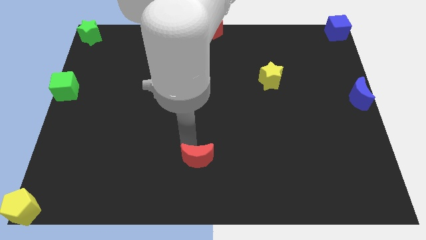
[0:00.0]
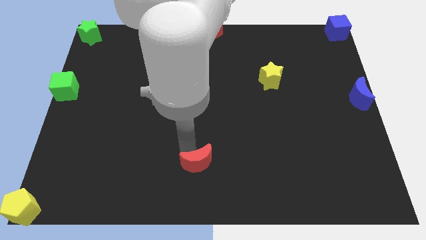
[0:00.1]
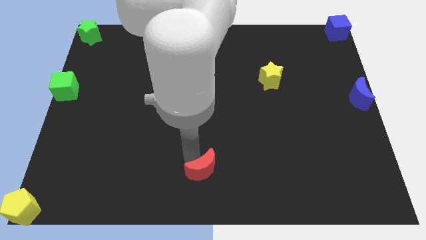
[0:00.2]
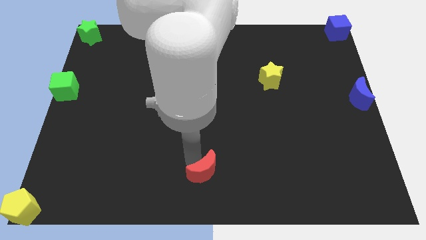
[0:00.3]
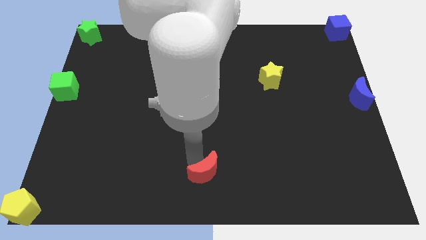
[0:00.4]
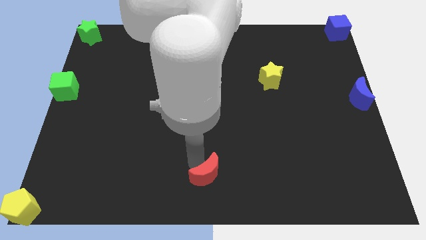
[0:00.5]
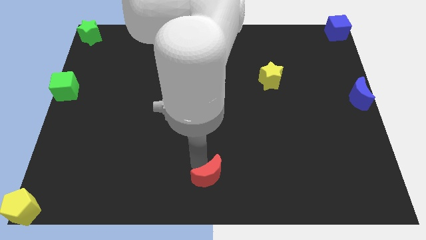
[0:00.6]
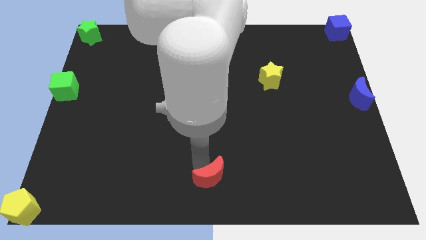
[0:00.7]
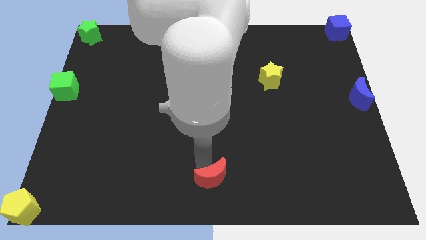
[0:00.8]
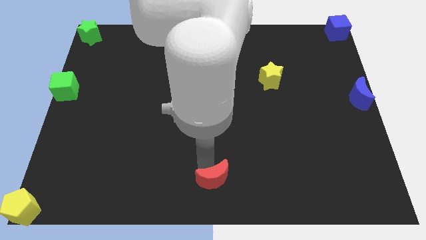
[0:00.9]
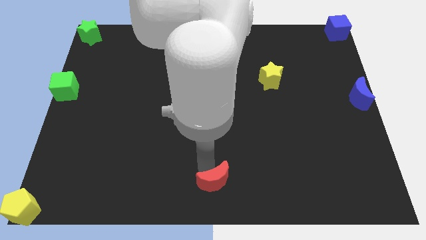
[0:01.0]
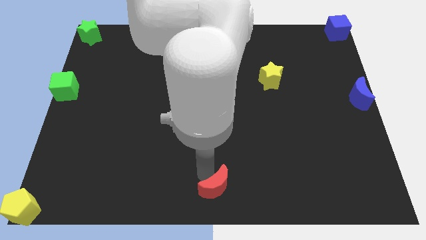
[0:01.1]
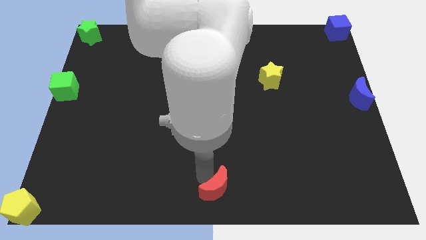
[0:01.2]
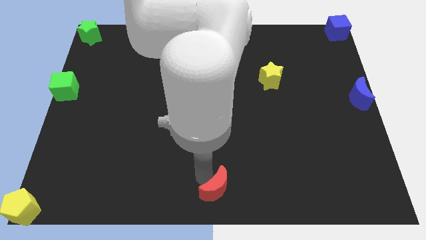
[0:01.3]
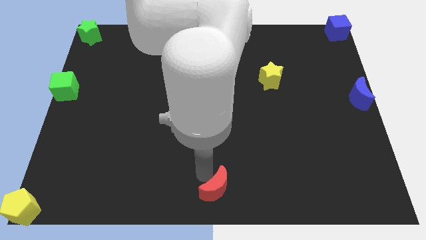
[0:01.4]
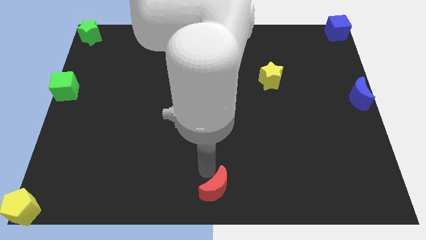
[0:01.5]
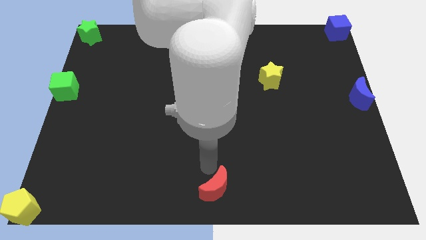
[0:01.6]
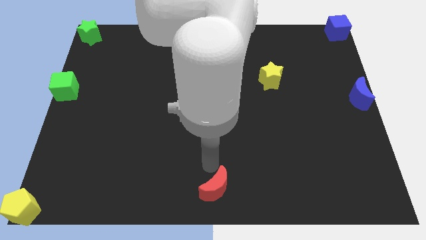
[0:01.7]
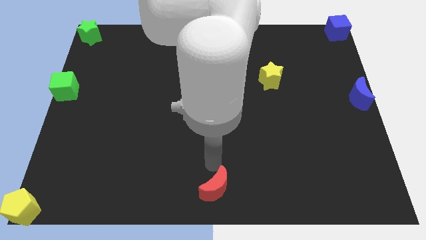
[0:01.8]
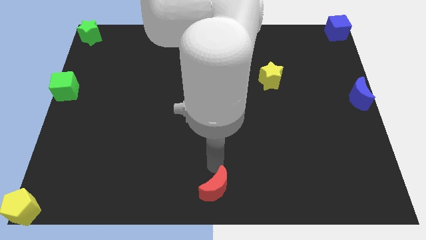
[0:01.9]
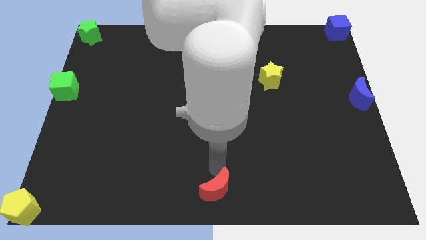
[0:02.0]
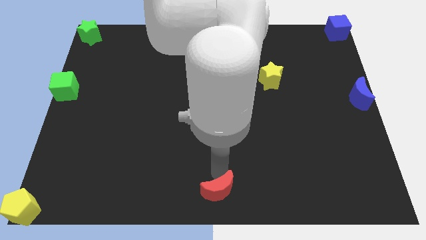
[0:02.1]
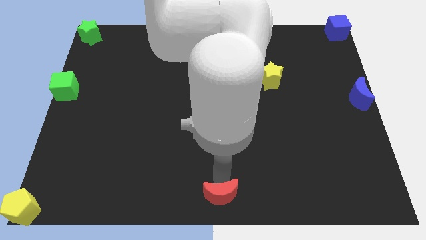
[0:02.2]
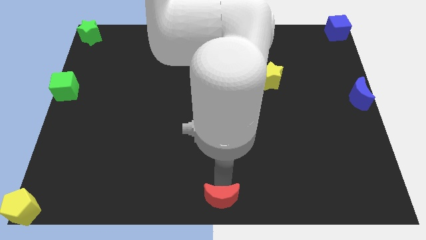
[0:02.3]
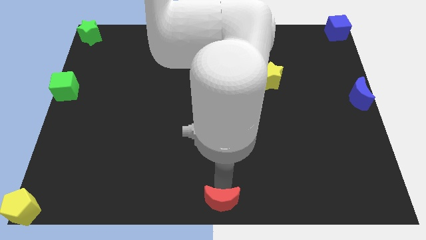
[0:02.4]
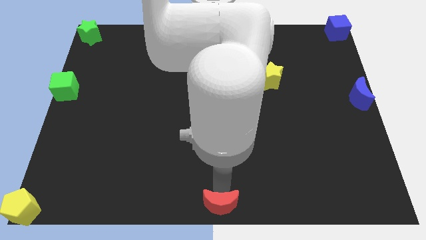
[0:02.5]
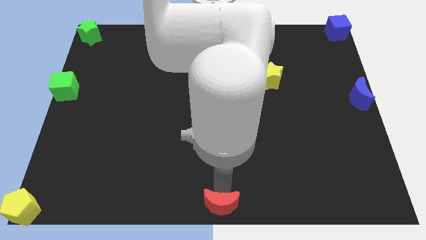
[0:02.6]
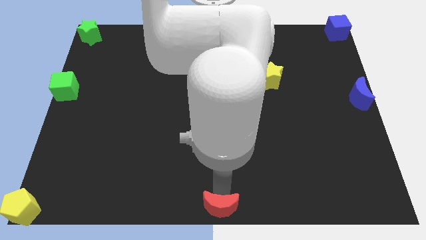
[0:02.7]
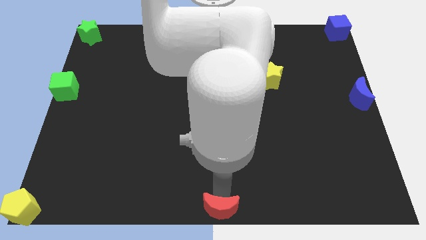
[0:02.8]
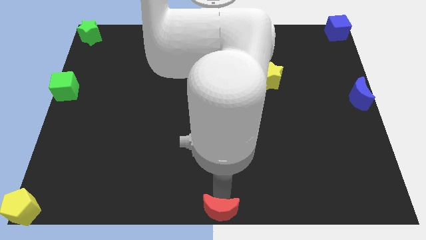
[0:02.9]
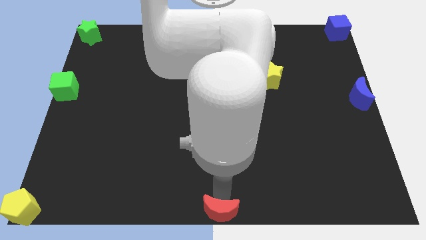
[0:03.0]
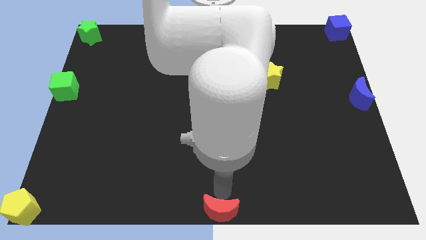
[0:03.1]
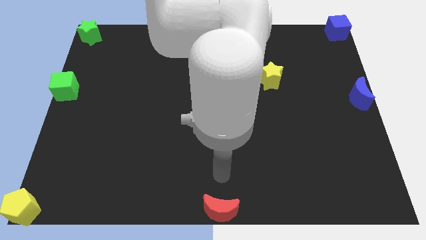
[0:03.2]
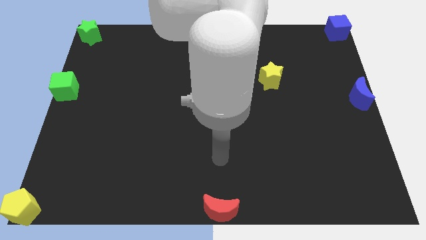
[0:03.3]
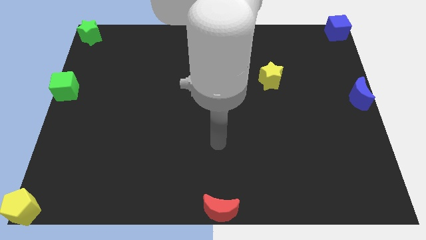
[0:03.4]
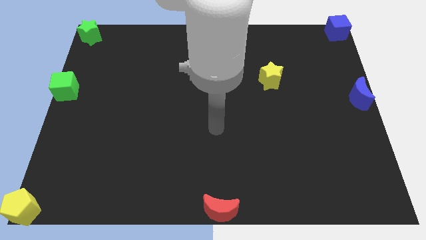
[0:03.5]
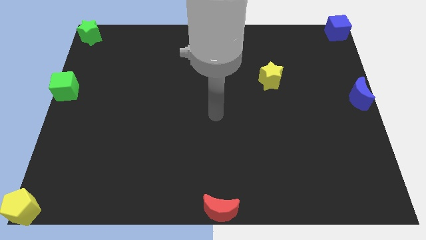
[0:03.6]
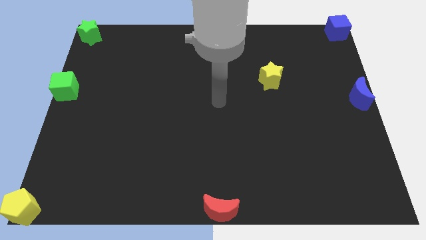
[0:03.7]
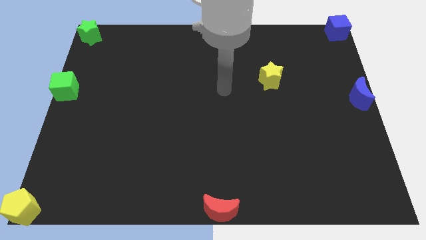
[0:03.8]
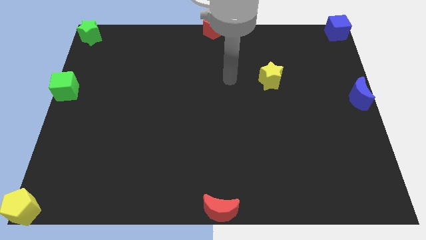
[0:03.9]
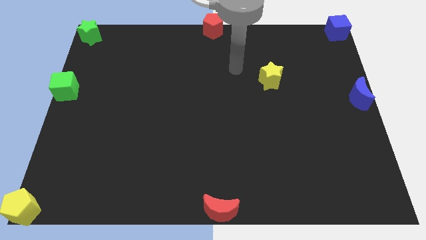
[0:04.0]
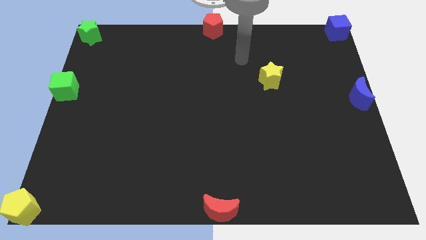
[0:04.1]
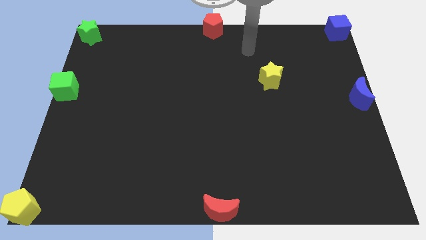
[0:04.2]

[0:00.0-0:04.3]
push the red moon to the bottom center

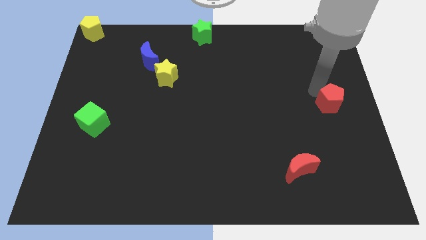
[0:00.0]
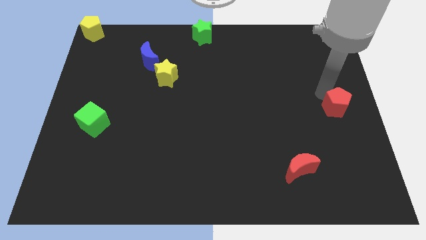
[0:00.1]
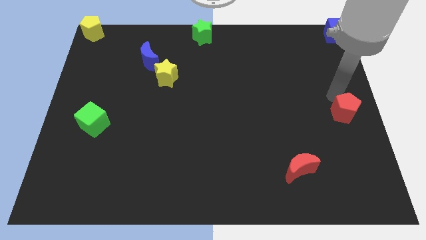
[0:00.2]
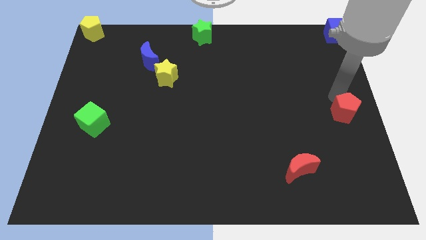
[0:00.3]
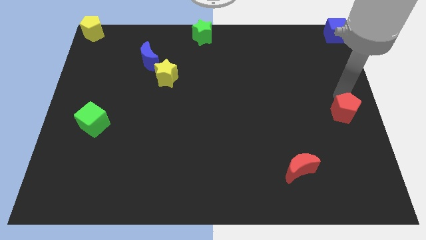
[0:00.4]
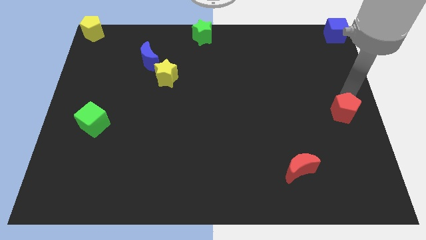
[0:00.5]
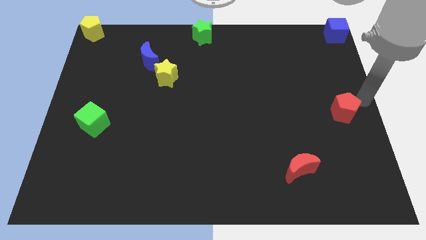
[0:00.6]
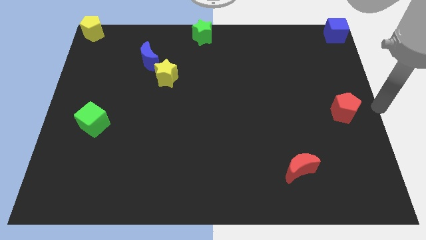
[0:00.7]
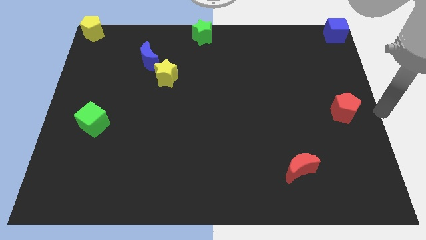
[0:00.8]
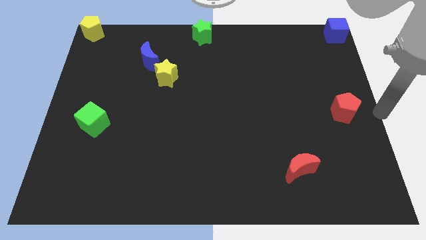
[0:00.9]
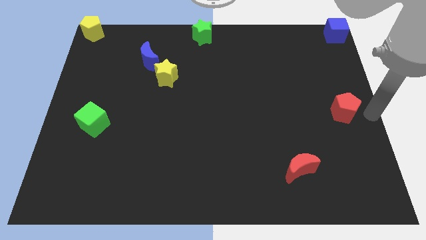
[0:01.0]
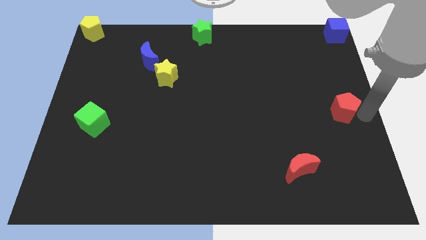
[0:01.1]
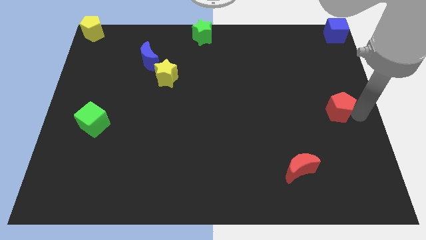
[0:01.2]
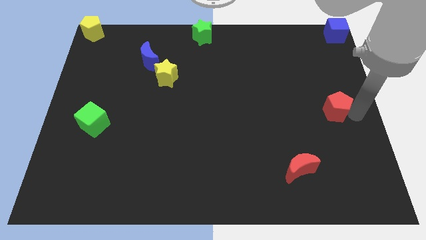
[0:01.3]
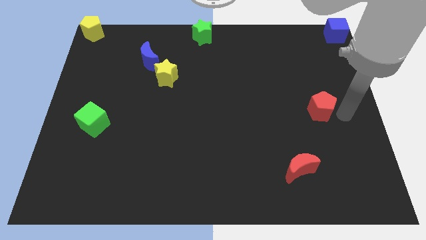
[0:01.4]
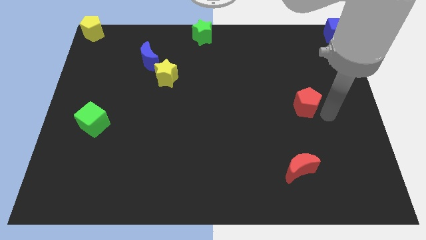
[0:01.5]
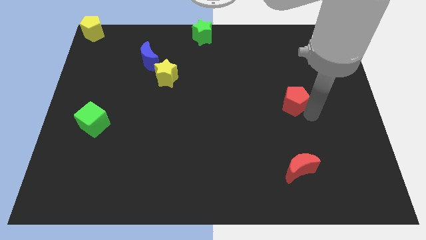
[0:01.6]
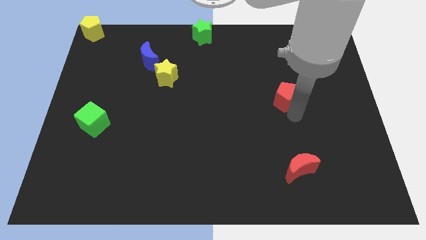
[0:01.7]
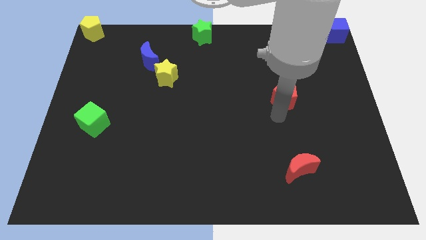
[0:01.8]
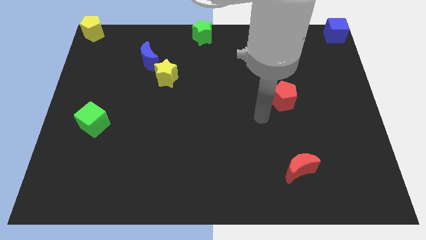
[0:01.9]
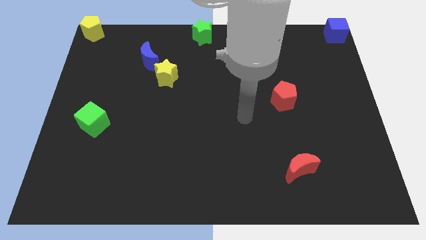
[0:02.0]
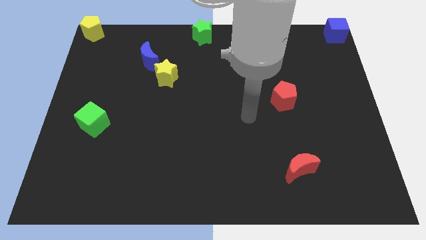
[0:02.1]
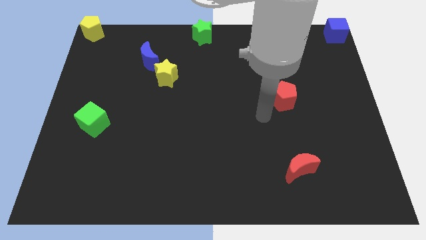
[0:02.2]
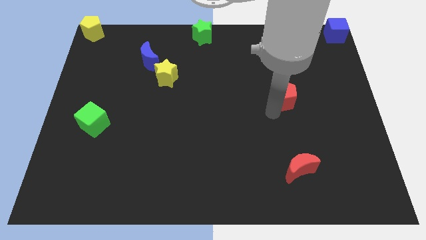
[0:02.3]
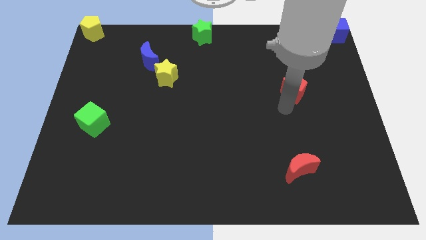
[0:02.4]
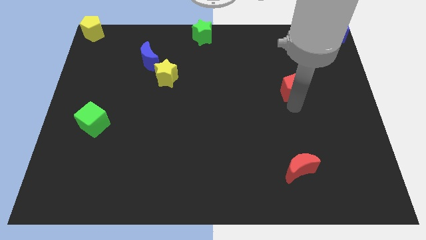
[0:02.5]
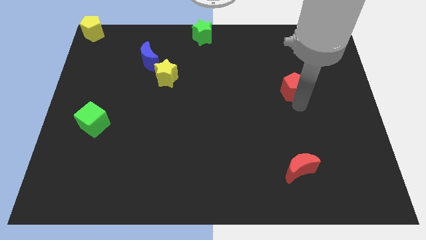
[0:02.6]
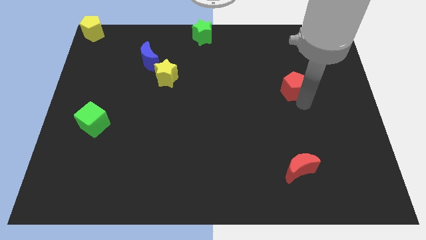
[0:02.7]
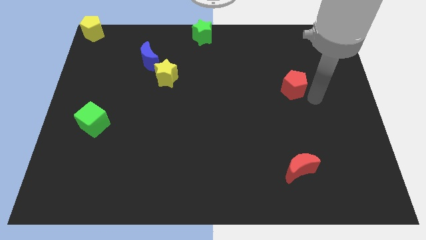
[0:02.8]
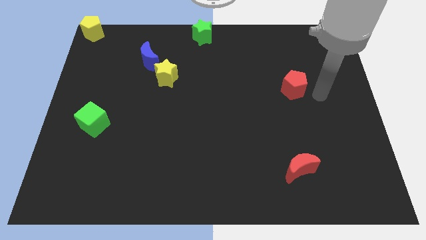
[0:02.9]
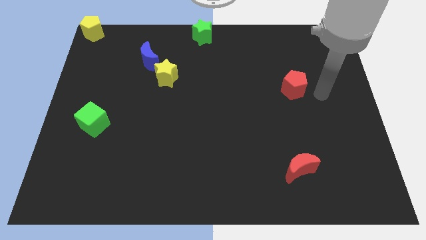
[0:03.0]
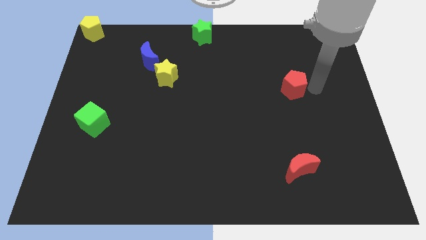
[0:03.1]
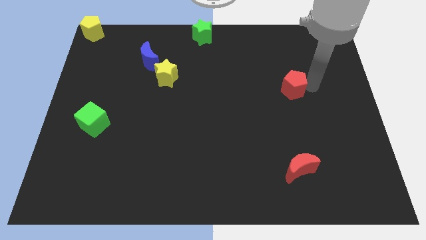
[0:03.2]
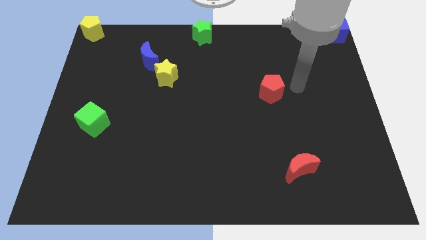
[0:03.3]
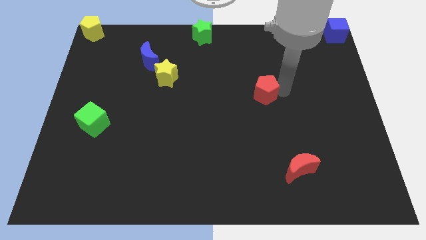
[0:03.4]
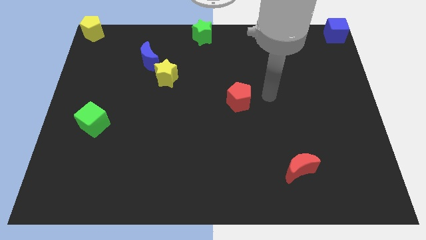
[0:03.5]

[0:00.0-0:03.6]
push the red pentagon to the top left of the red crescent

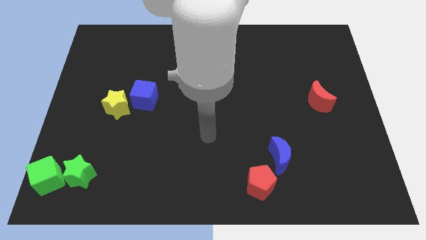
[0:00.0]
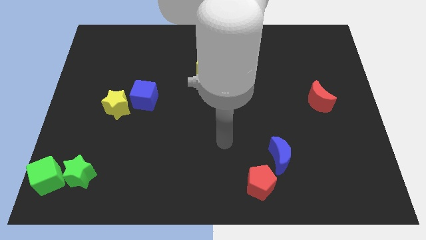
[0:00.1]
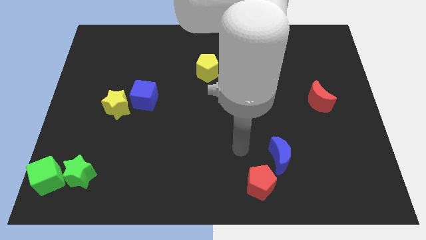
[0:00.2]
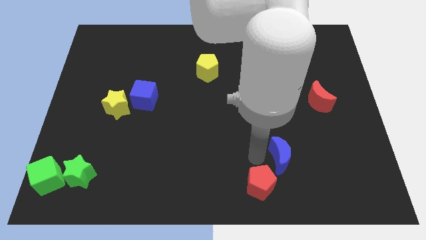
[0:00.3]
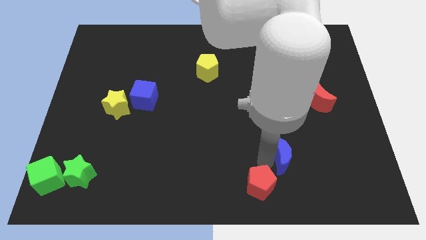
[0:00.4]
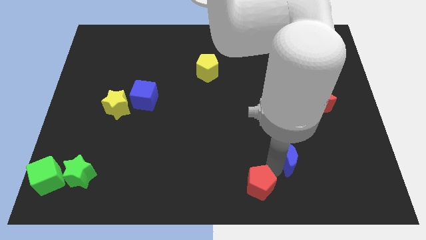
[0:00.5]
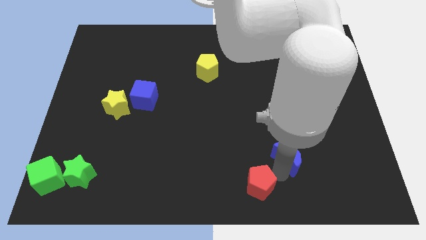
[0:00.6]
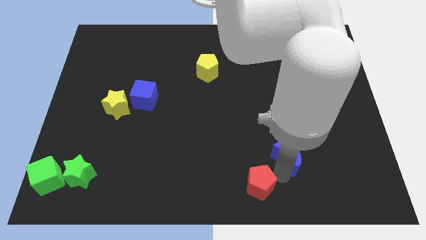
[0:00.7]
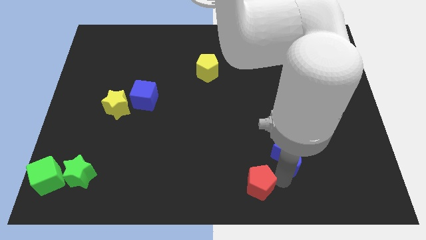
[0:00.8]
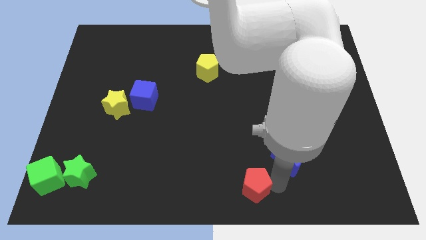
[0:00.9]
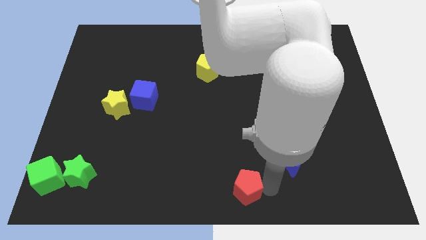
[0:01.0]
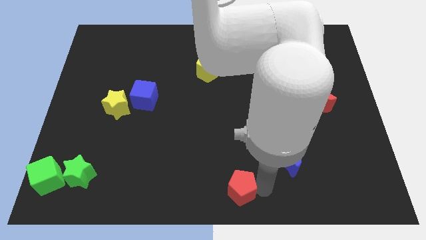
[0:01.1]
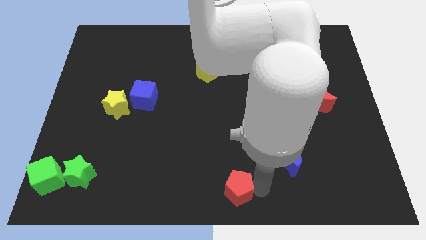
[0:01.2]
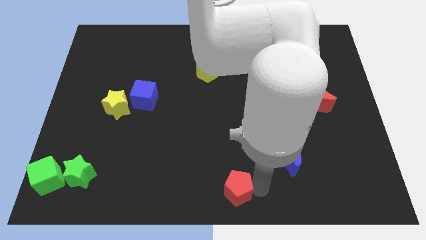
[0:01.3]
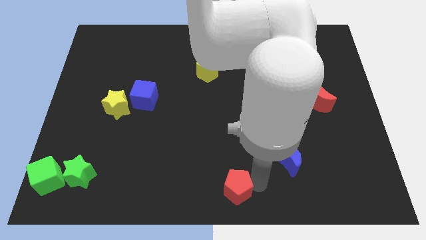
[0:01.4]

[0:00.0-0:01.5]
separate red pentagon and blue moon
